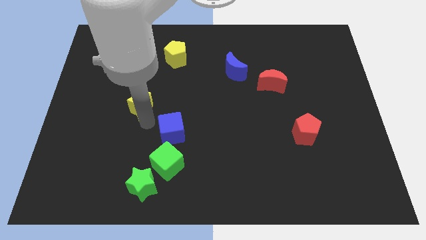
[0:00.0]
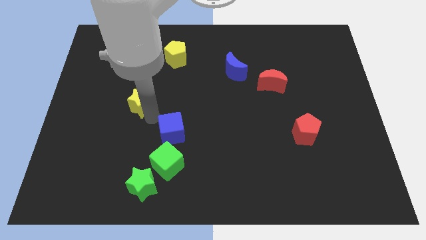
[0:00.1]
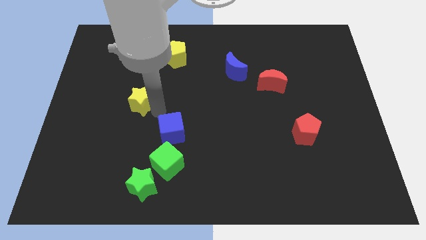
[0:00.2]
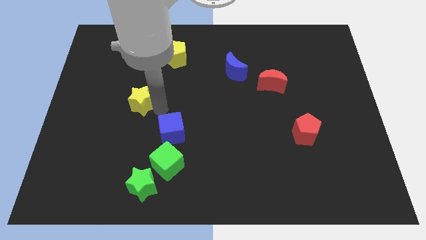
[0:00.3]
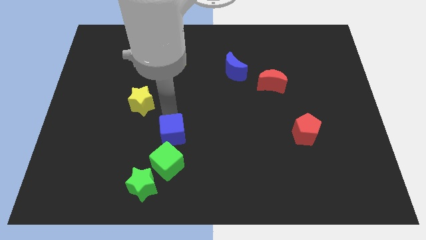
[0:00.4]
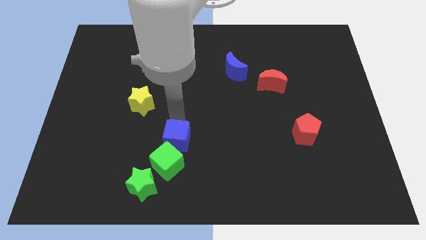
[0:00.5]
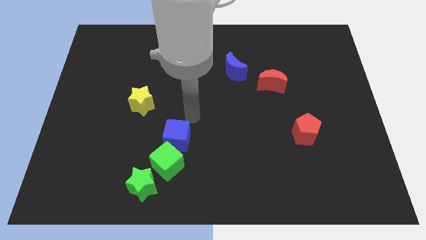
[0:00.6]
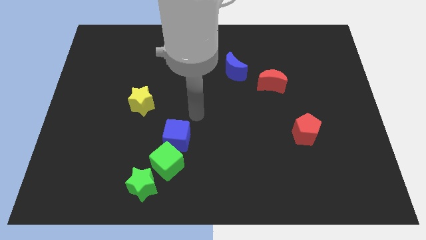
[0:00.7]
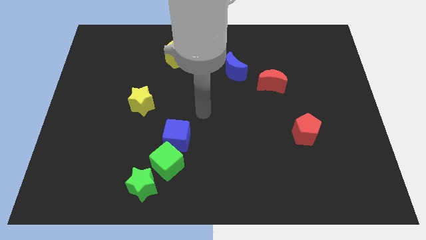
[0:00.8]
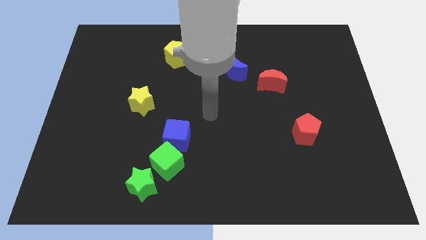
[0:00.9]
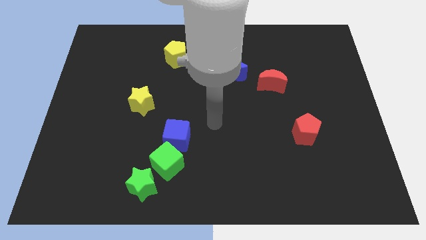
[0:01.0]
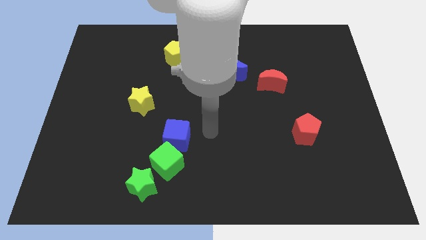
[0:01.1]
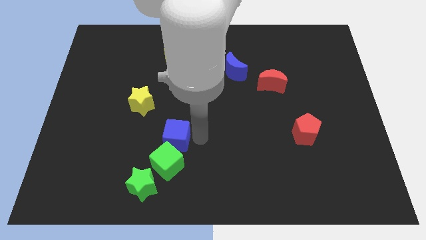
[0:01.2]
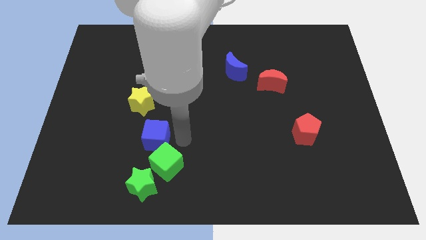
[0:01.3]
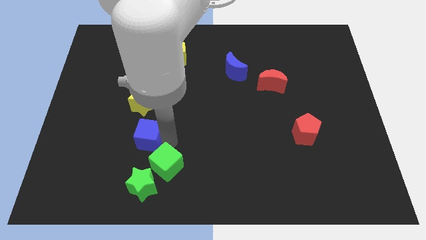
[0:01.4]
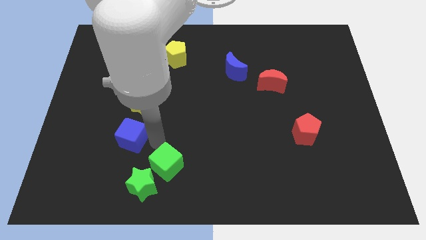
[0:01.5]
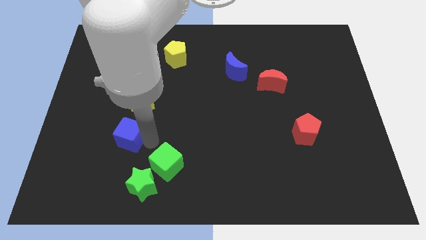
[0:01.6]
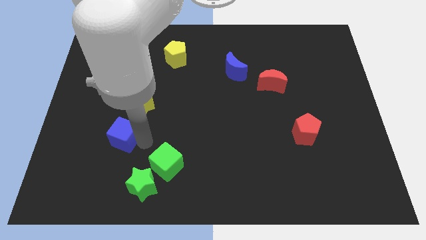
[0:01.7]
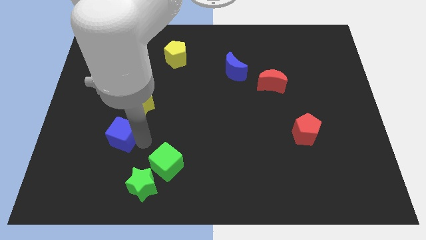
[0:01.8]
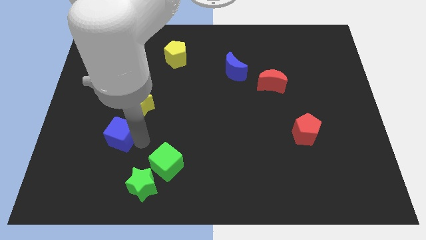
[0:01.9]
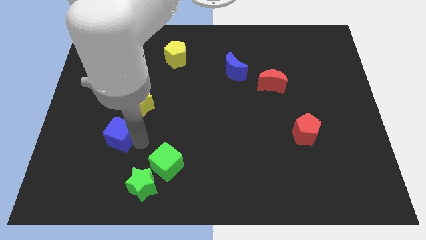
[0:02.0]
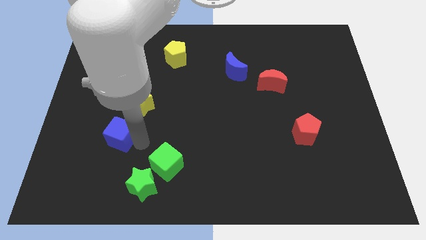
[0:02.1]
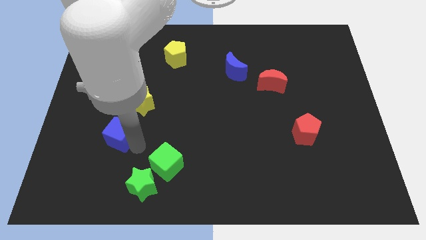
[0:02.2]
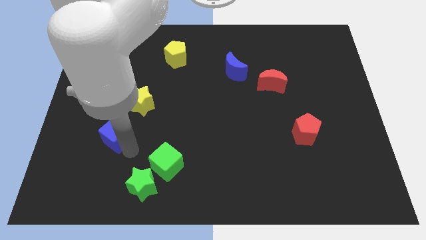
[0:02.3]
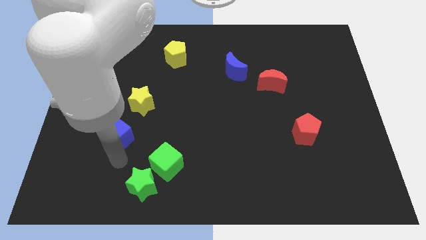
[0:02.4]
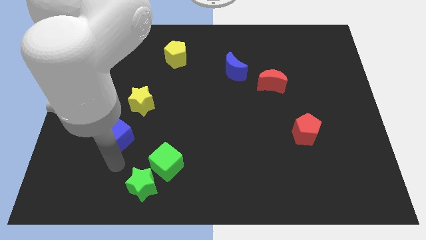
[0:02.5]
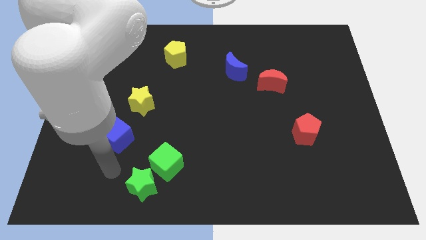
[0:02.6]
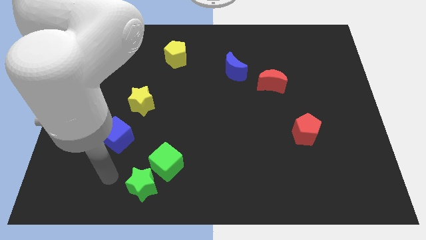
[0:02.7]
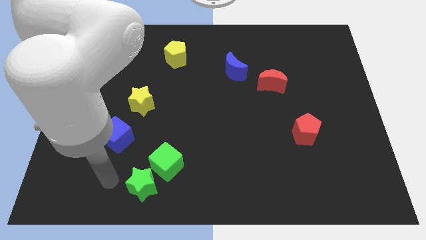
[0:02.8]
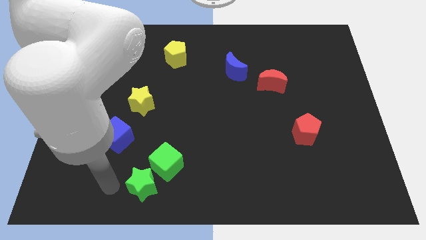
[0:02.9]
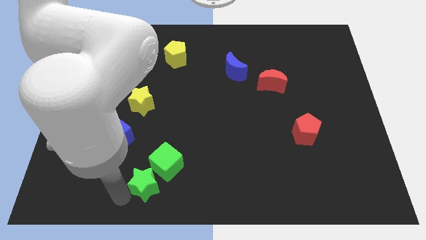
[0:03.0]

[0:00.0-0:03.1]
separate the blue cube from the green cube

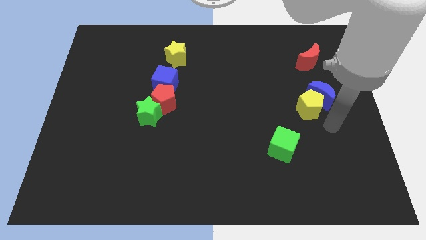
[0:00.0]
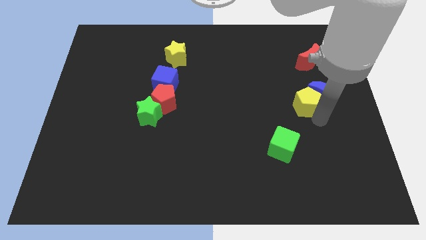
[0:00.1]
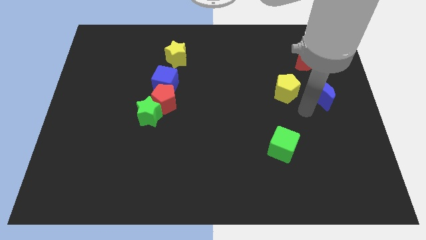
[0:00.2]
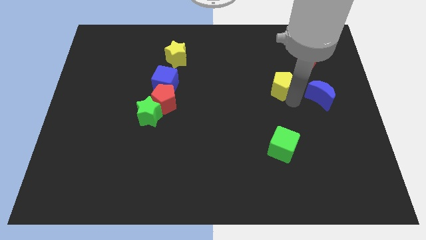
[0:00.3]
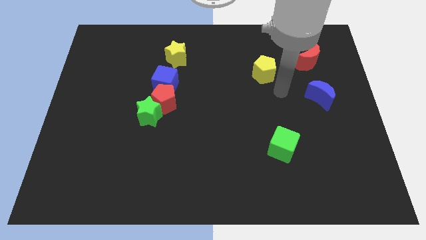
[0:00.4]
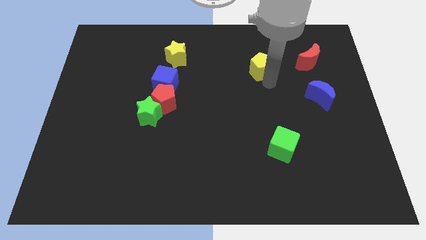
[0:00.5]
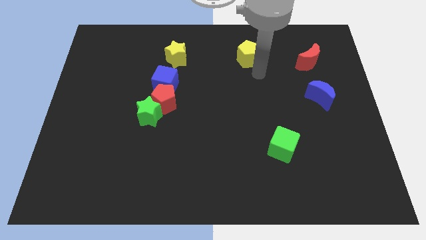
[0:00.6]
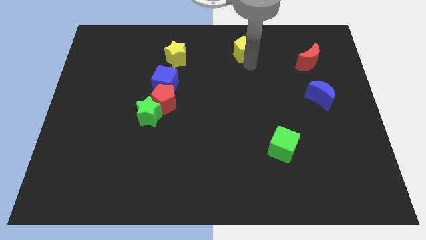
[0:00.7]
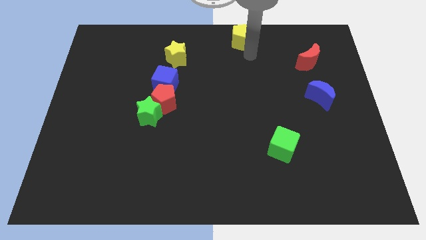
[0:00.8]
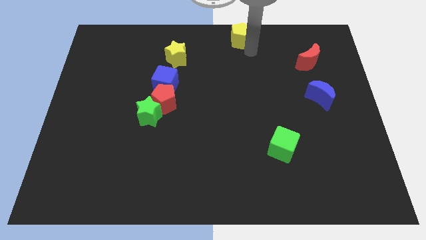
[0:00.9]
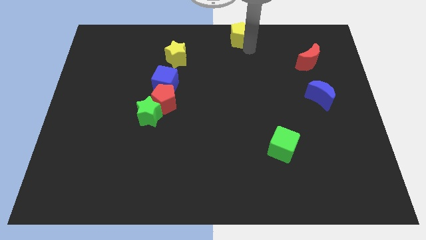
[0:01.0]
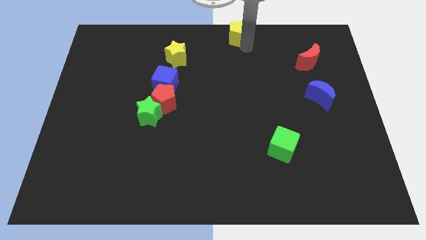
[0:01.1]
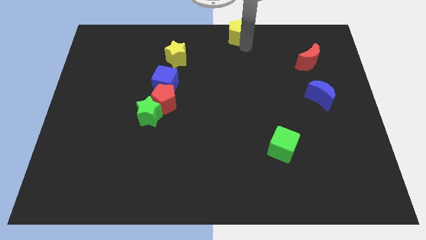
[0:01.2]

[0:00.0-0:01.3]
move yellow pentagon to top center

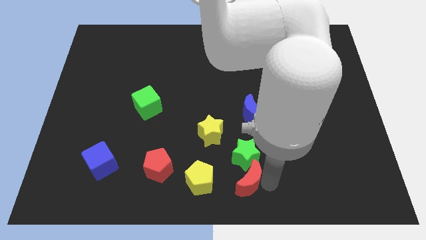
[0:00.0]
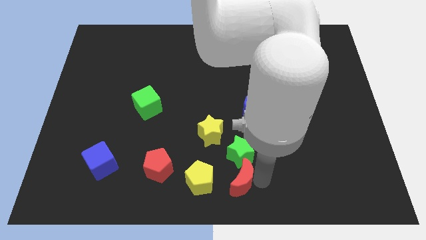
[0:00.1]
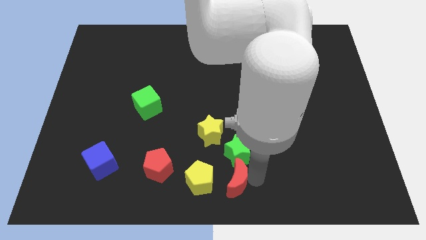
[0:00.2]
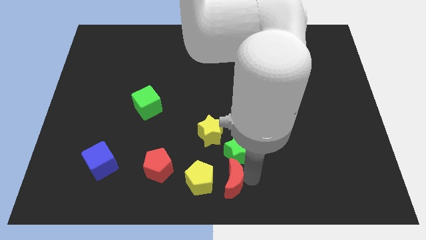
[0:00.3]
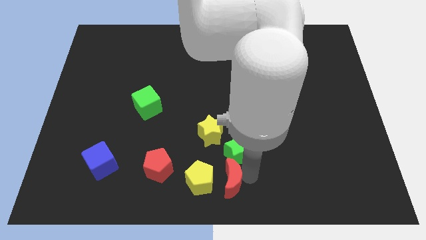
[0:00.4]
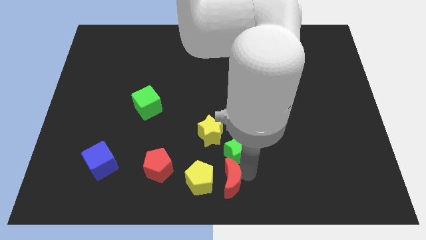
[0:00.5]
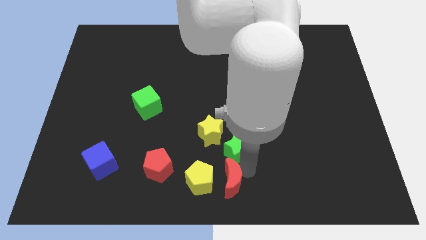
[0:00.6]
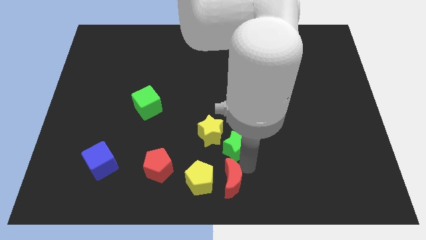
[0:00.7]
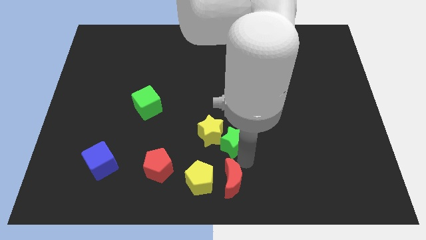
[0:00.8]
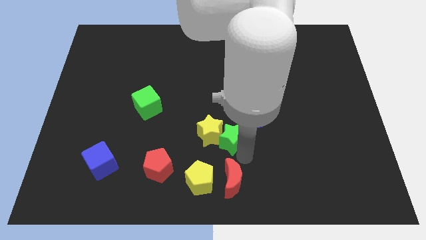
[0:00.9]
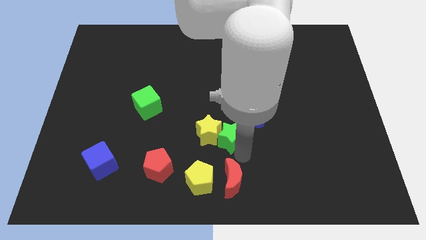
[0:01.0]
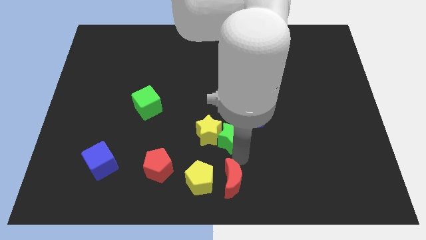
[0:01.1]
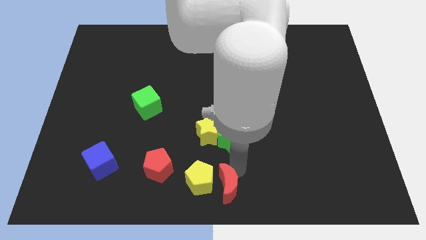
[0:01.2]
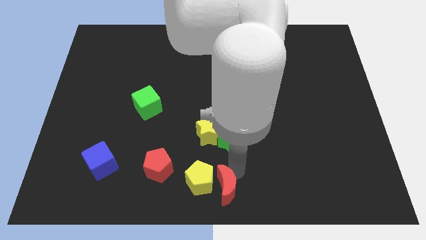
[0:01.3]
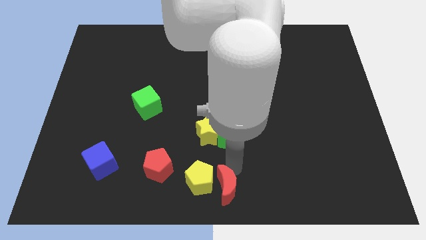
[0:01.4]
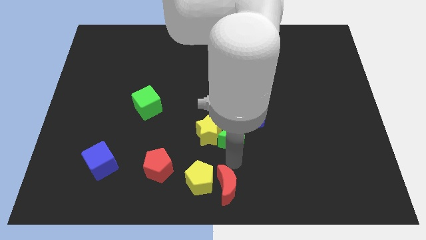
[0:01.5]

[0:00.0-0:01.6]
separate red crescent and green star

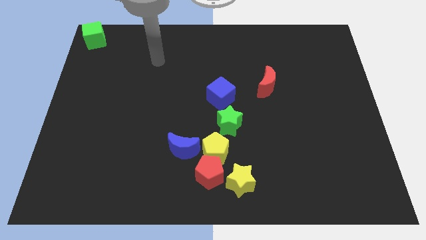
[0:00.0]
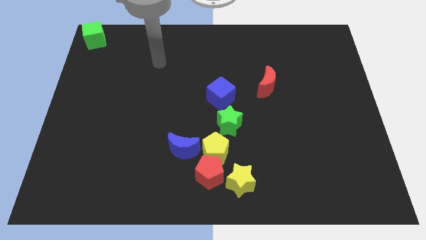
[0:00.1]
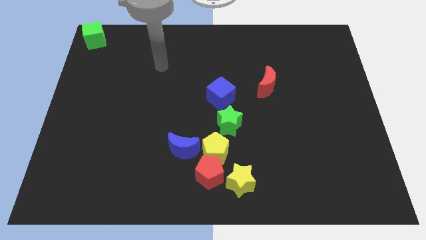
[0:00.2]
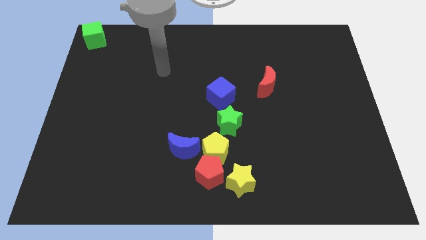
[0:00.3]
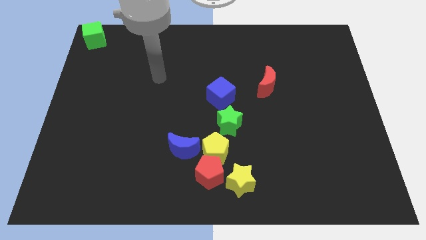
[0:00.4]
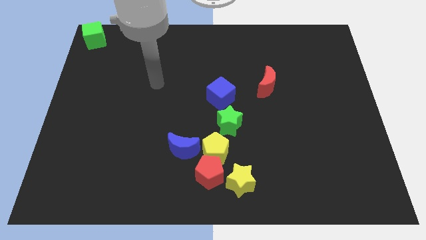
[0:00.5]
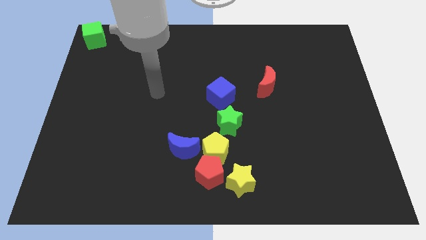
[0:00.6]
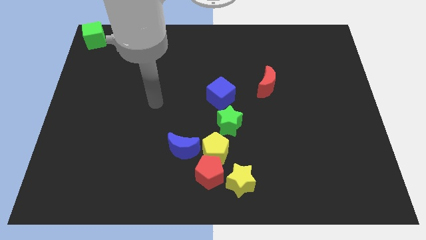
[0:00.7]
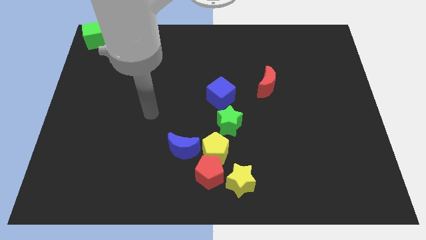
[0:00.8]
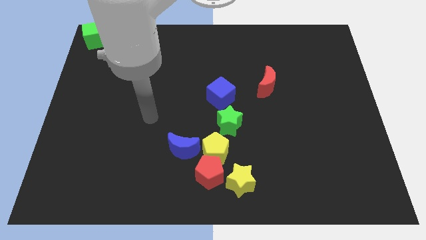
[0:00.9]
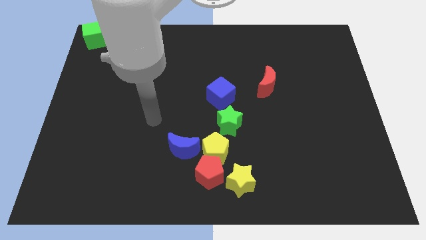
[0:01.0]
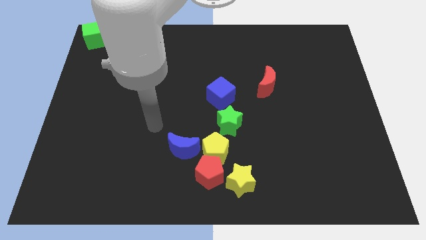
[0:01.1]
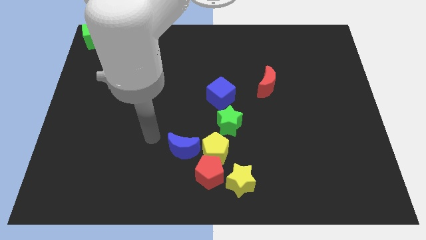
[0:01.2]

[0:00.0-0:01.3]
move arm towards blue crescent

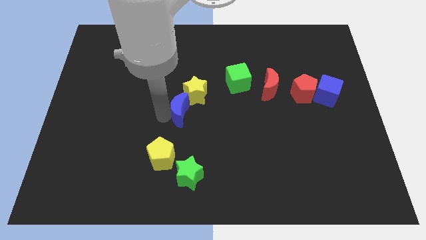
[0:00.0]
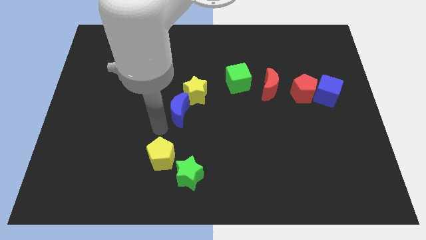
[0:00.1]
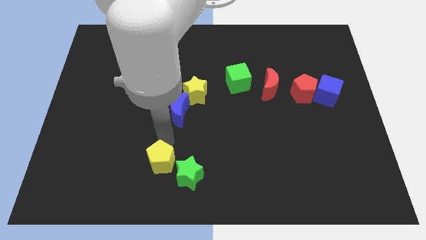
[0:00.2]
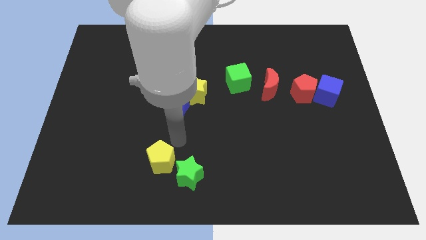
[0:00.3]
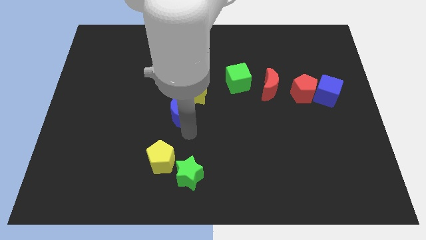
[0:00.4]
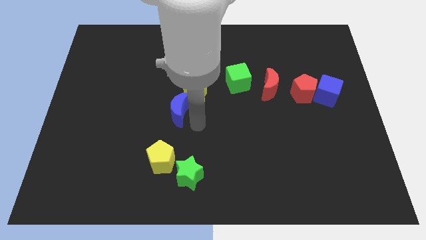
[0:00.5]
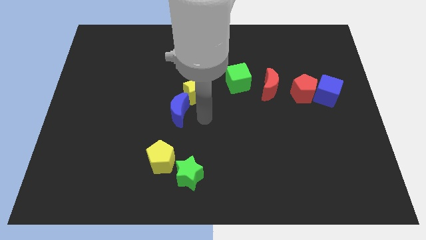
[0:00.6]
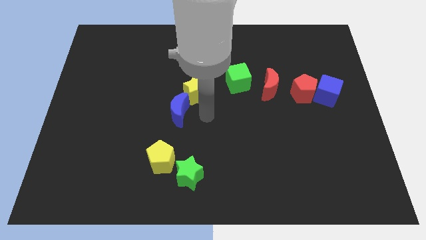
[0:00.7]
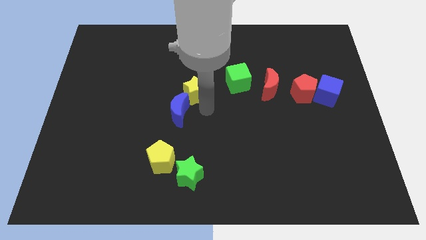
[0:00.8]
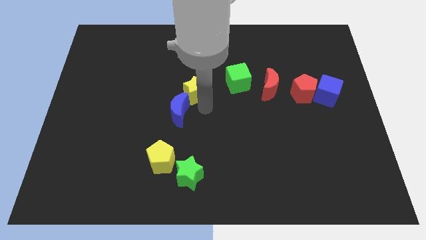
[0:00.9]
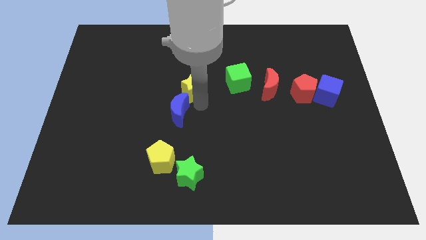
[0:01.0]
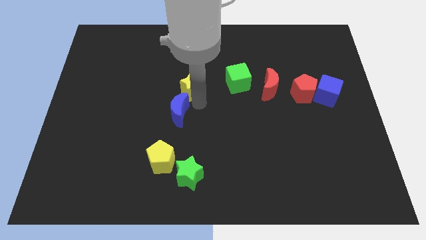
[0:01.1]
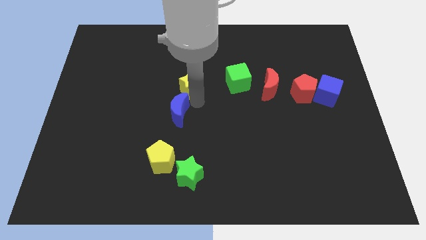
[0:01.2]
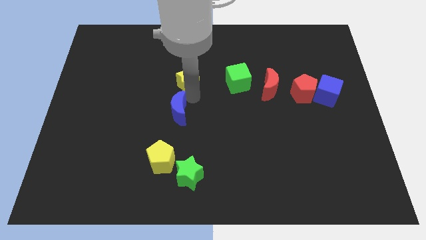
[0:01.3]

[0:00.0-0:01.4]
move your arm towards the yellow star

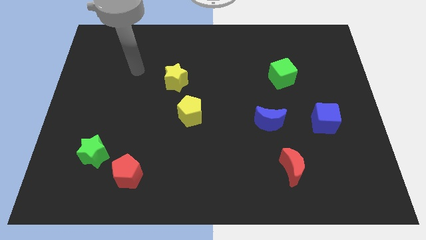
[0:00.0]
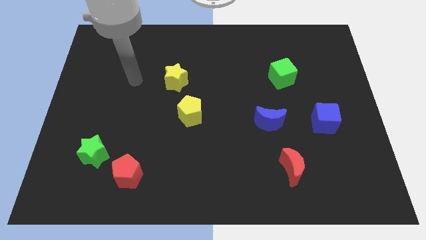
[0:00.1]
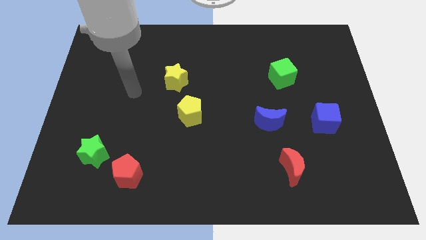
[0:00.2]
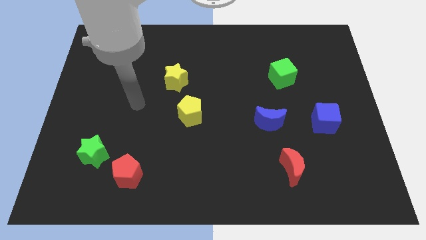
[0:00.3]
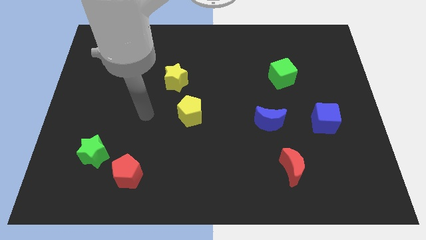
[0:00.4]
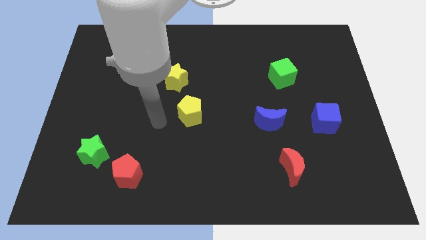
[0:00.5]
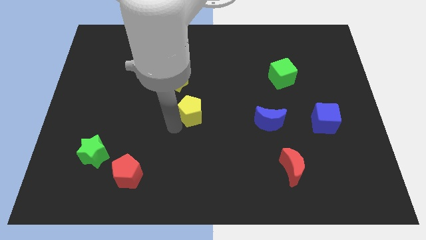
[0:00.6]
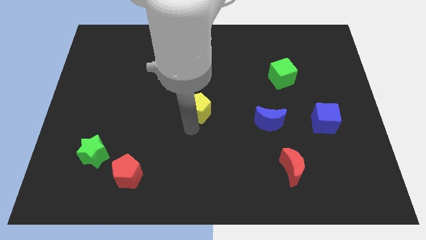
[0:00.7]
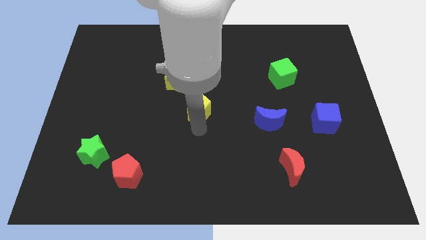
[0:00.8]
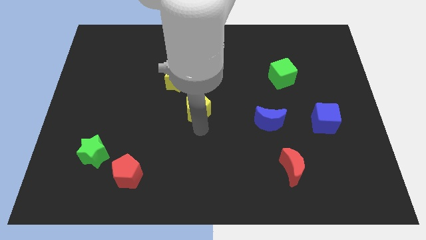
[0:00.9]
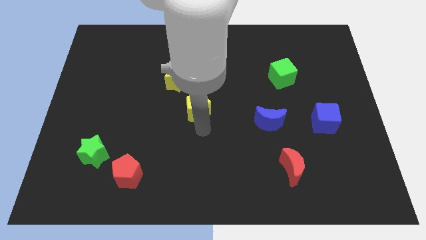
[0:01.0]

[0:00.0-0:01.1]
move the arm towards the bottom of the yellow pentagon
